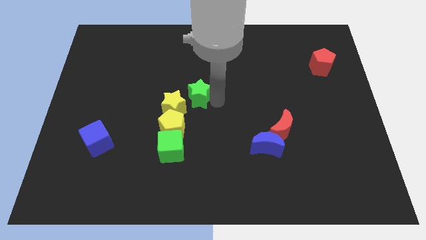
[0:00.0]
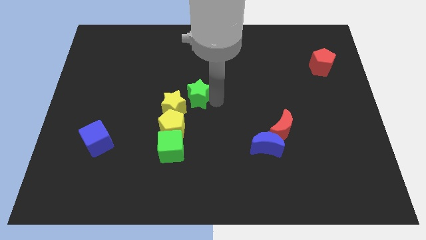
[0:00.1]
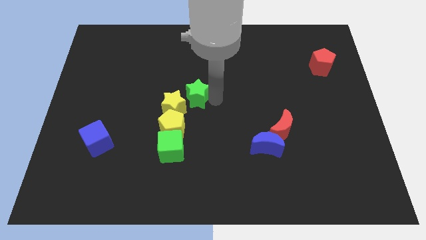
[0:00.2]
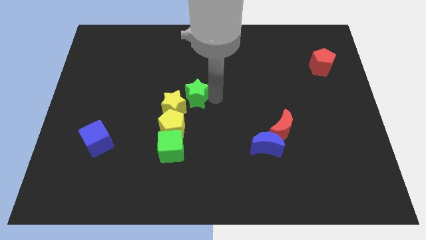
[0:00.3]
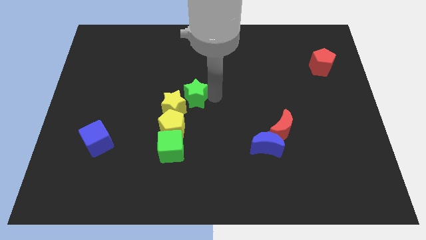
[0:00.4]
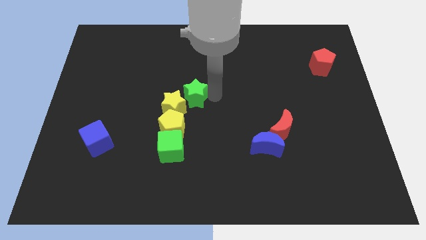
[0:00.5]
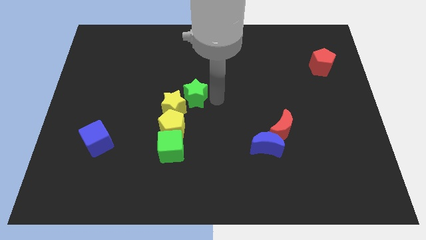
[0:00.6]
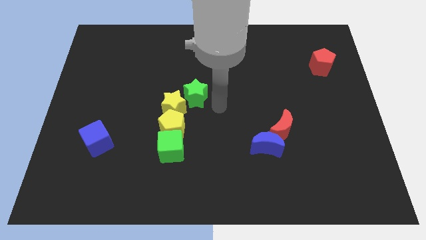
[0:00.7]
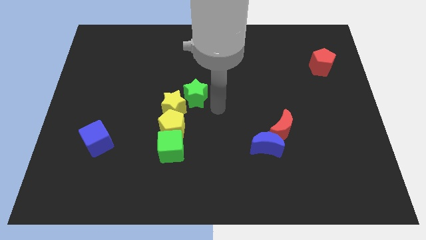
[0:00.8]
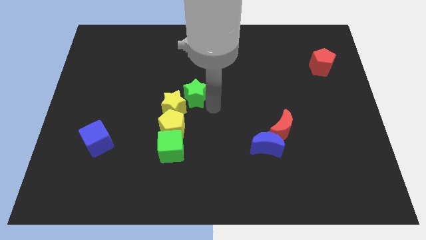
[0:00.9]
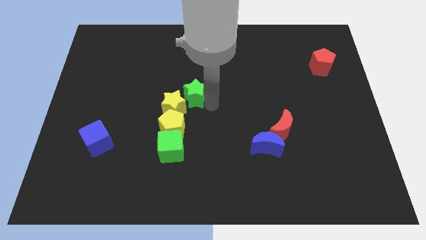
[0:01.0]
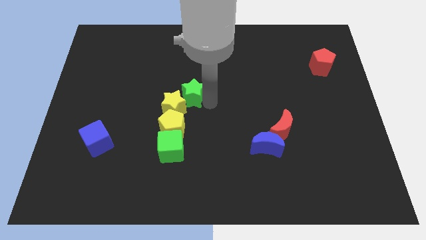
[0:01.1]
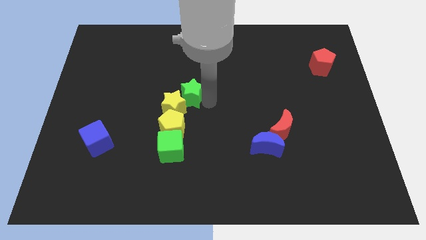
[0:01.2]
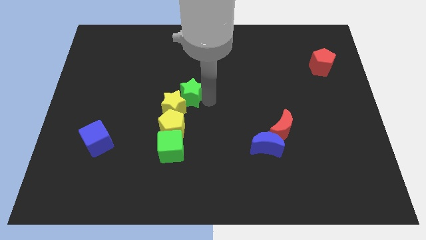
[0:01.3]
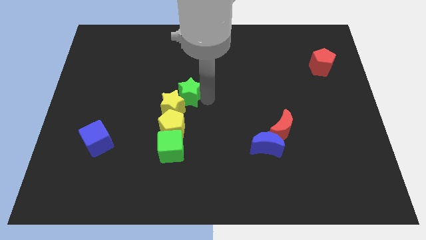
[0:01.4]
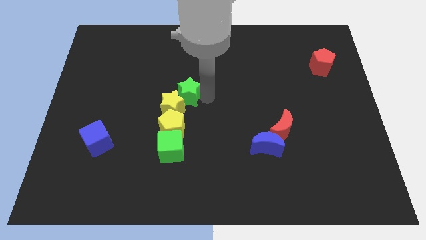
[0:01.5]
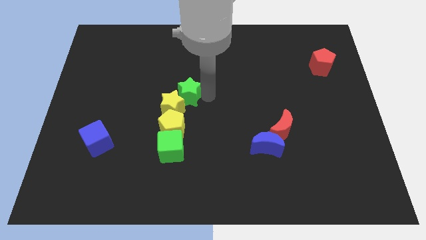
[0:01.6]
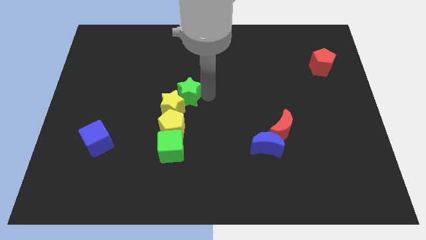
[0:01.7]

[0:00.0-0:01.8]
make the green star touch the top right of the yellow star

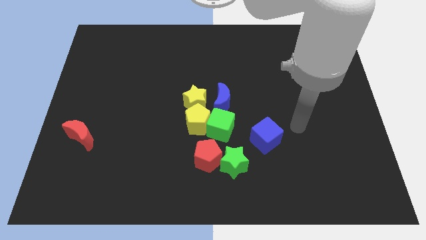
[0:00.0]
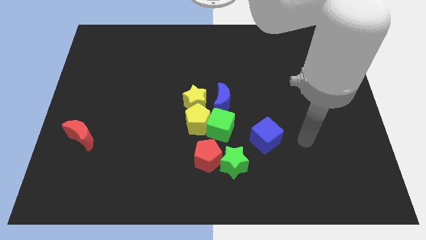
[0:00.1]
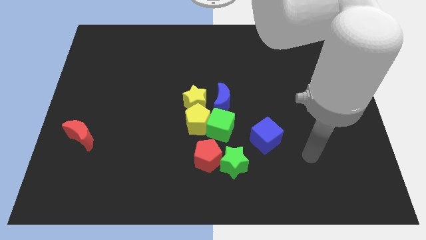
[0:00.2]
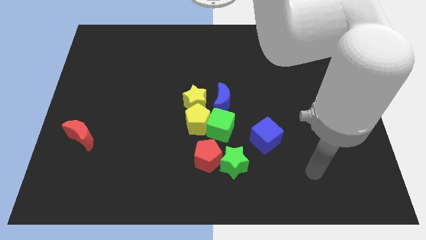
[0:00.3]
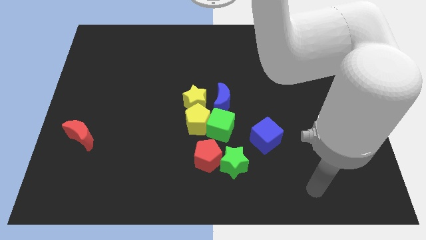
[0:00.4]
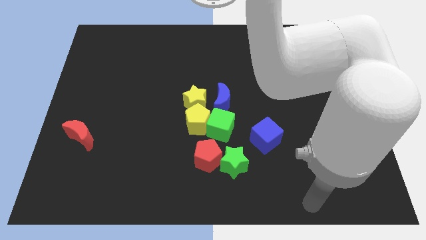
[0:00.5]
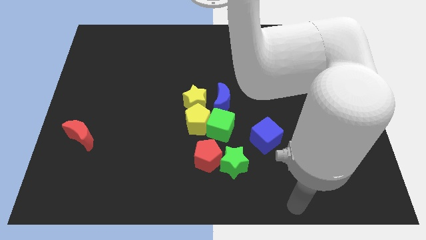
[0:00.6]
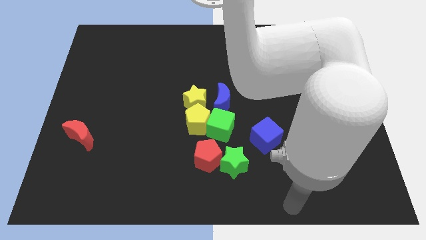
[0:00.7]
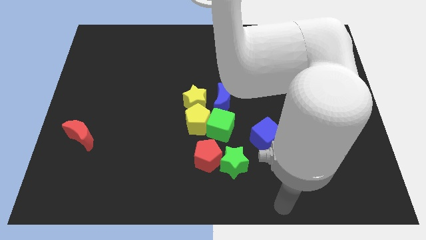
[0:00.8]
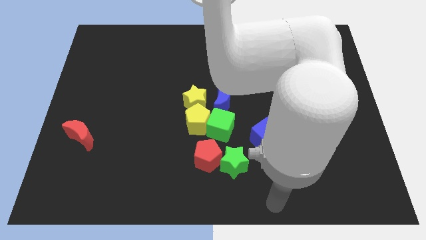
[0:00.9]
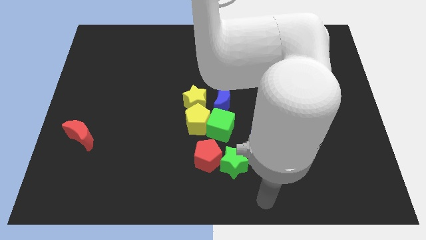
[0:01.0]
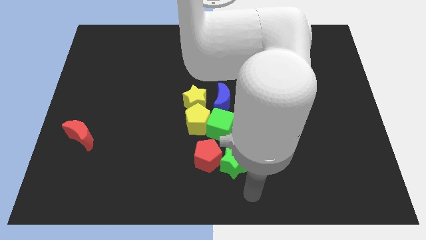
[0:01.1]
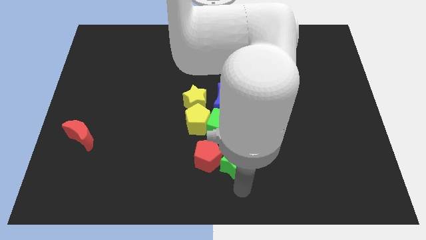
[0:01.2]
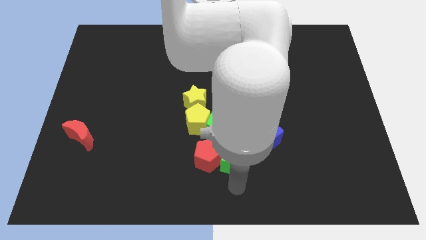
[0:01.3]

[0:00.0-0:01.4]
place your arm at the bottom of the green star

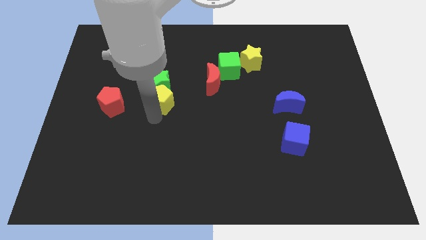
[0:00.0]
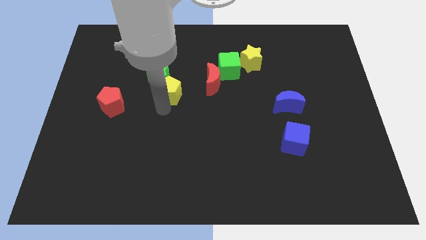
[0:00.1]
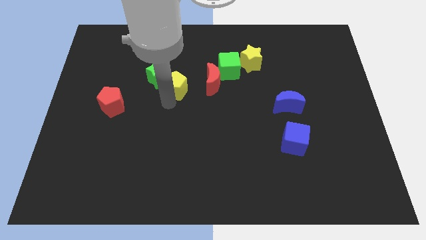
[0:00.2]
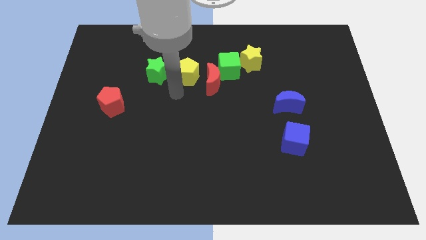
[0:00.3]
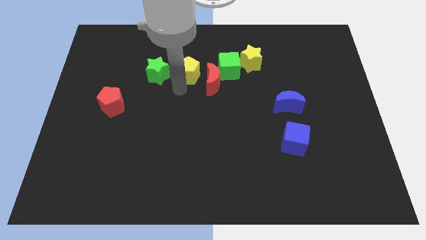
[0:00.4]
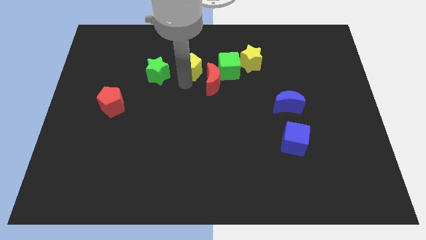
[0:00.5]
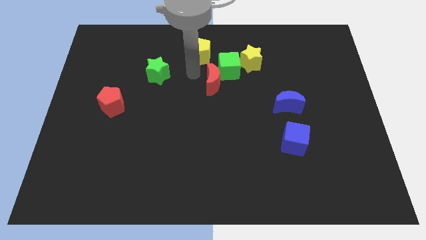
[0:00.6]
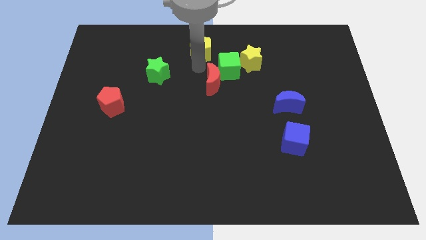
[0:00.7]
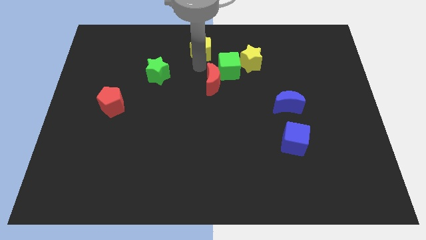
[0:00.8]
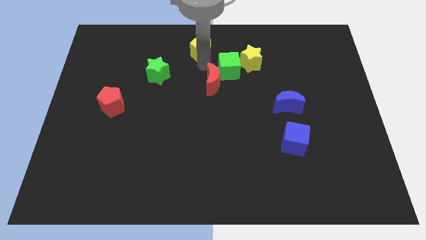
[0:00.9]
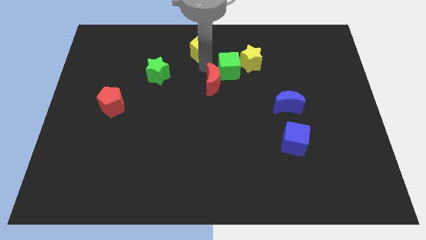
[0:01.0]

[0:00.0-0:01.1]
move the yellow pentagon to the top left of the green cube

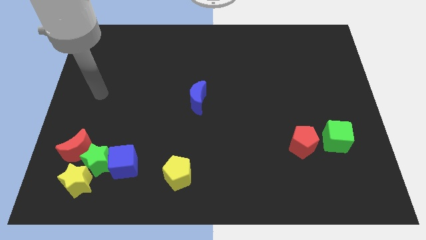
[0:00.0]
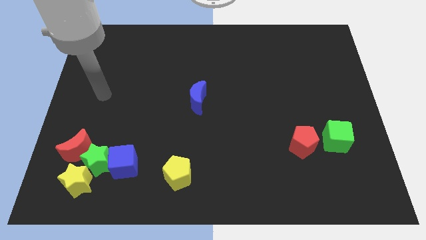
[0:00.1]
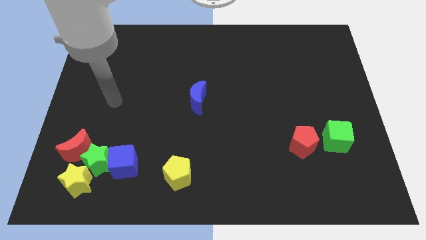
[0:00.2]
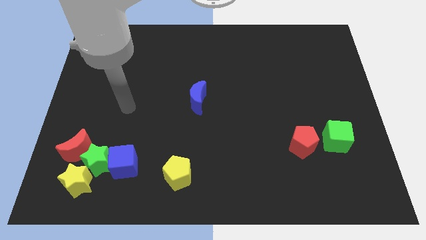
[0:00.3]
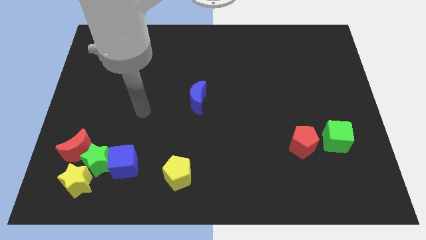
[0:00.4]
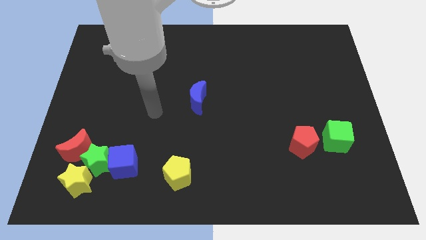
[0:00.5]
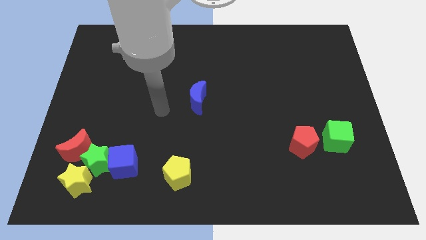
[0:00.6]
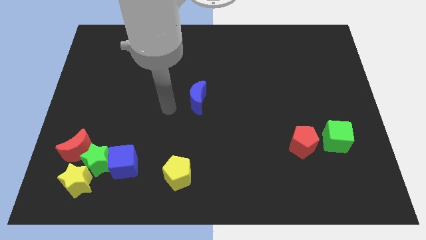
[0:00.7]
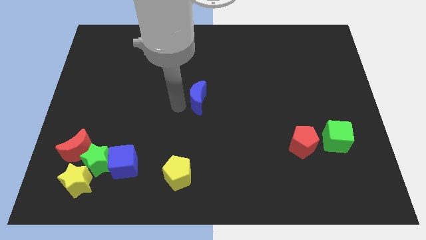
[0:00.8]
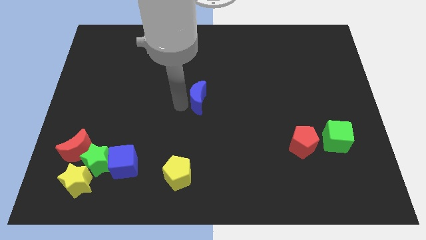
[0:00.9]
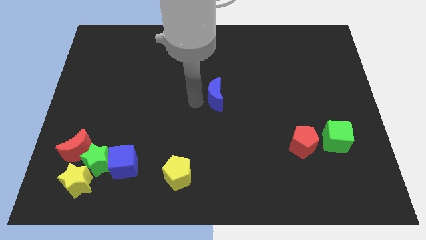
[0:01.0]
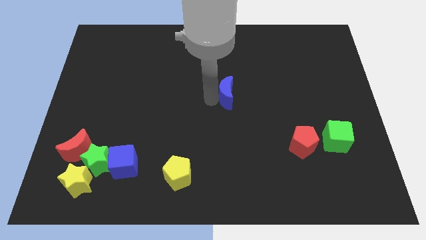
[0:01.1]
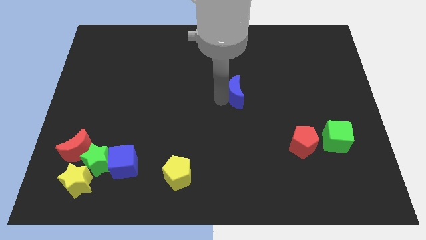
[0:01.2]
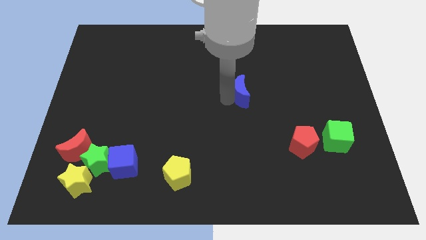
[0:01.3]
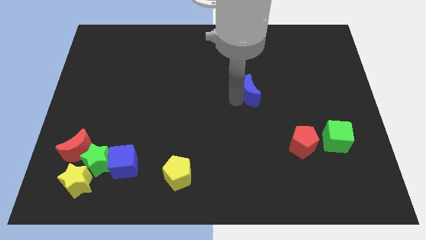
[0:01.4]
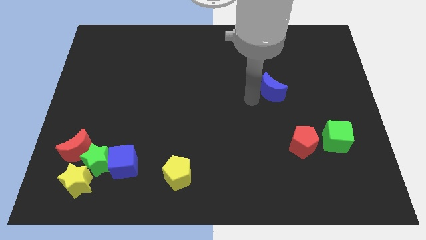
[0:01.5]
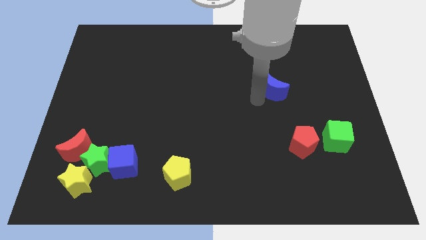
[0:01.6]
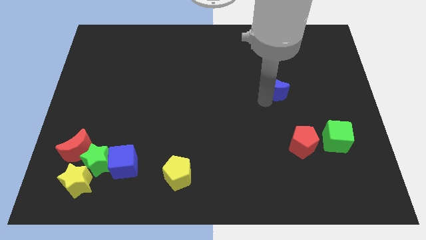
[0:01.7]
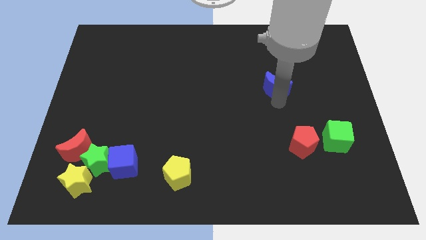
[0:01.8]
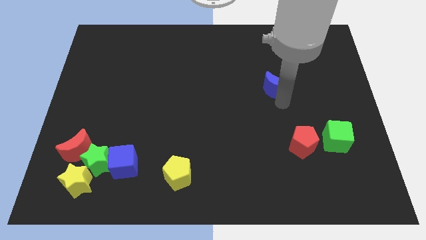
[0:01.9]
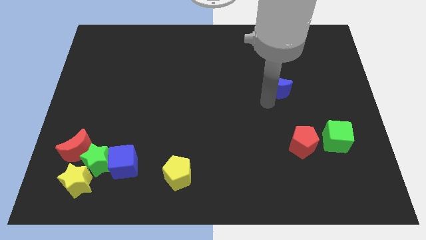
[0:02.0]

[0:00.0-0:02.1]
move the blue moon towards the right side of the board

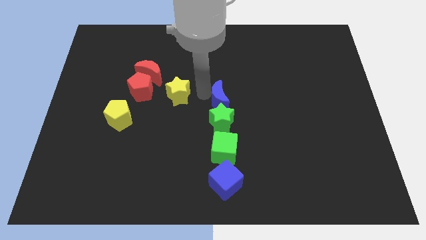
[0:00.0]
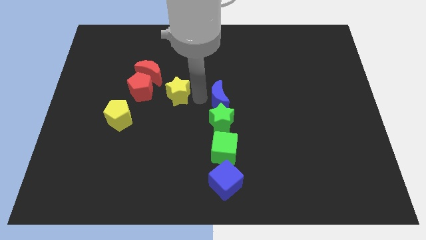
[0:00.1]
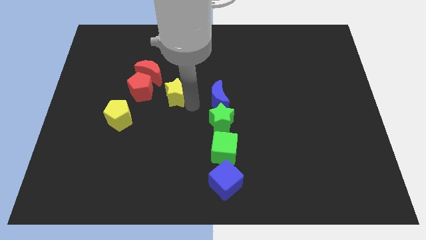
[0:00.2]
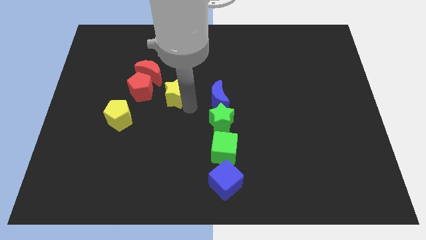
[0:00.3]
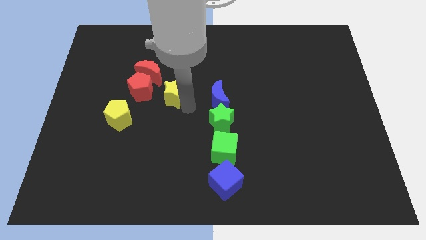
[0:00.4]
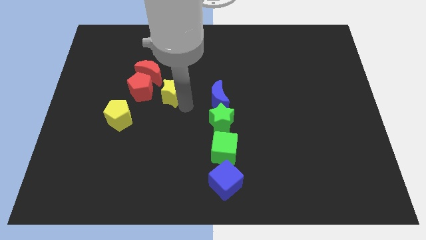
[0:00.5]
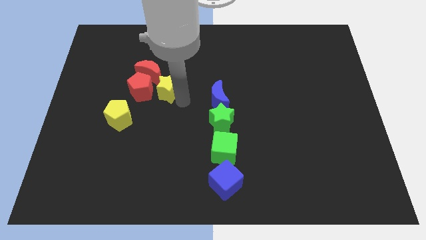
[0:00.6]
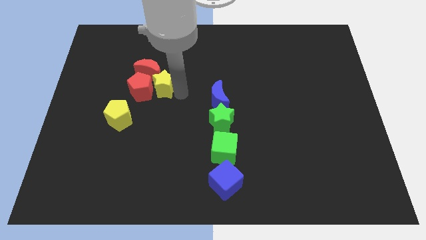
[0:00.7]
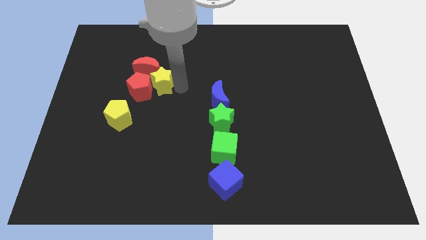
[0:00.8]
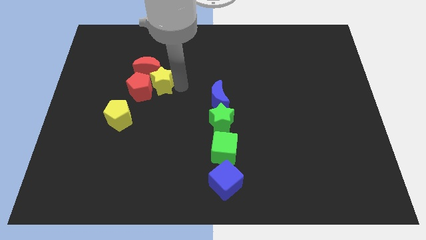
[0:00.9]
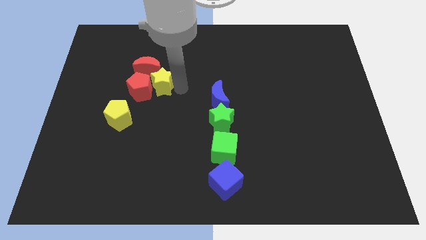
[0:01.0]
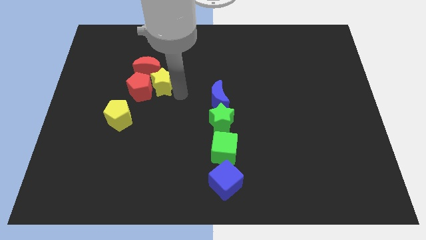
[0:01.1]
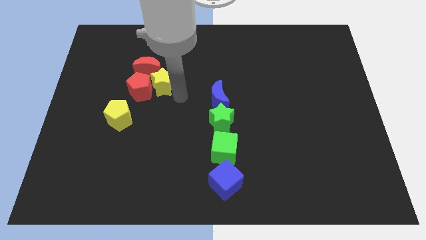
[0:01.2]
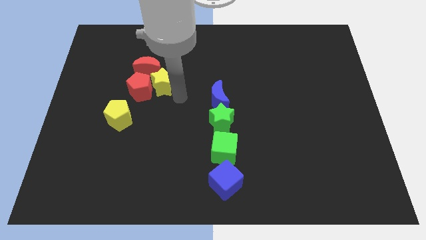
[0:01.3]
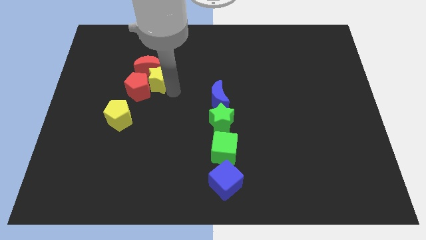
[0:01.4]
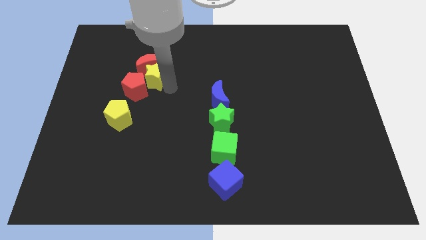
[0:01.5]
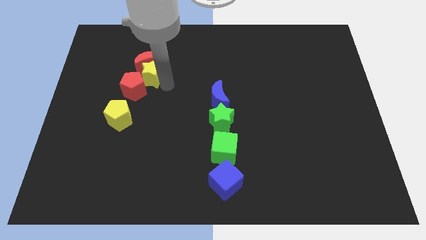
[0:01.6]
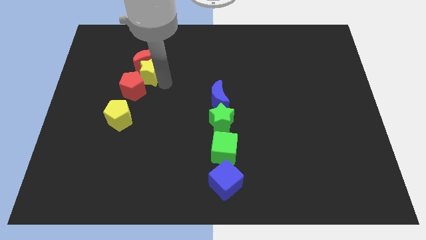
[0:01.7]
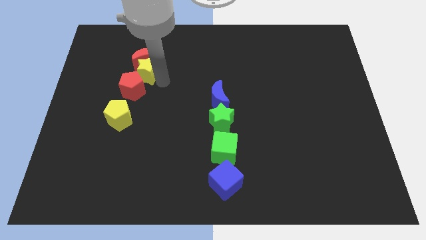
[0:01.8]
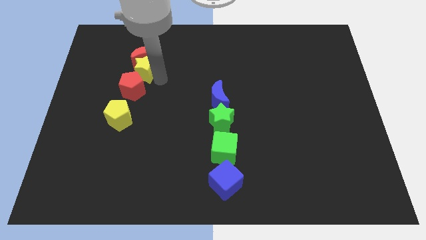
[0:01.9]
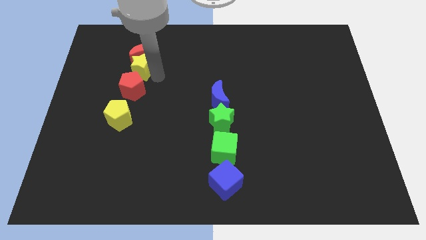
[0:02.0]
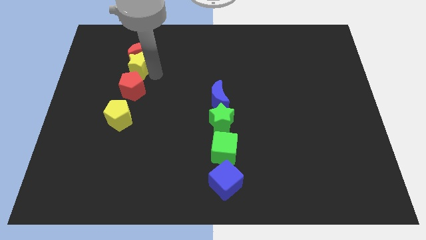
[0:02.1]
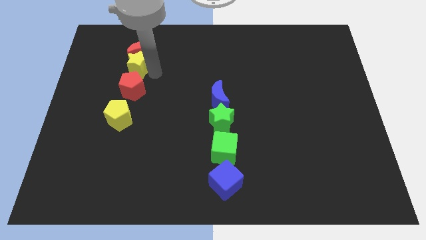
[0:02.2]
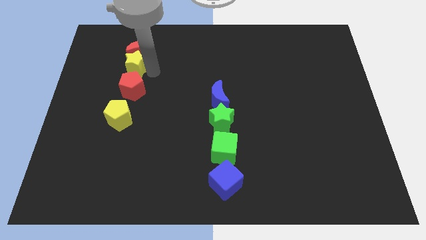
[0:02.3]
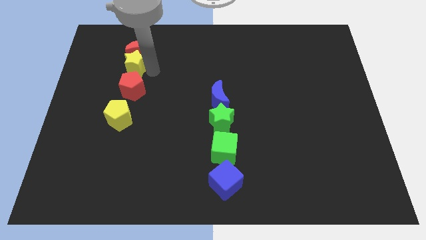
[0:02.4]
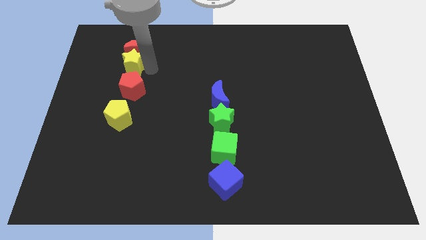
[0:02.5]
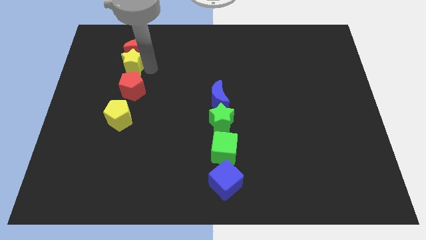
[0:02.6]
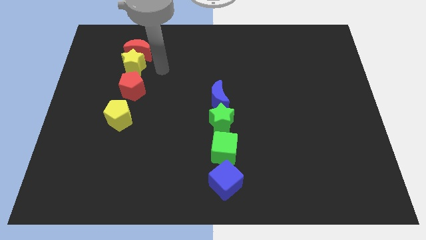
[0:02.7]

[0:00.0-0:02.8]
move the yellow star to the bottom of red crescent
